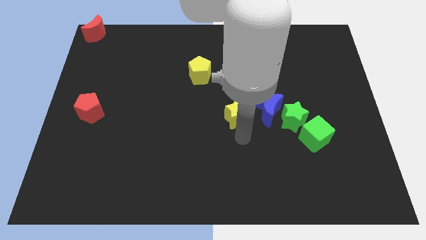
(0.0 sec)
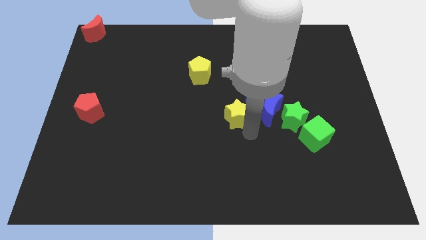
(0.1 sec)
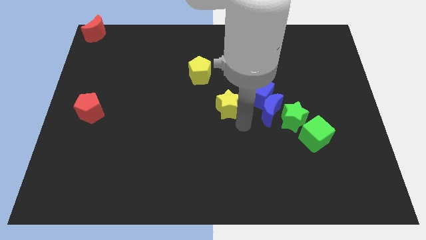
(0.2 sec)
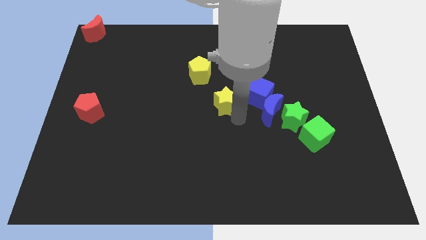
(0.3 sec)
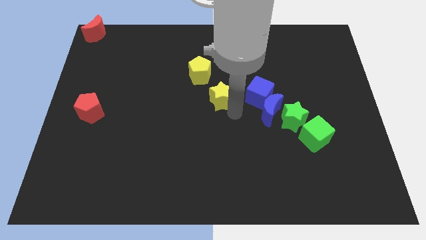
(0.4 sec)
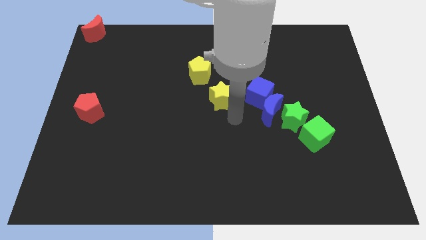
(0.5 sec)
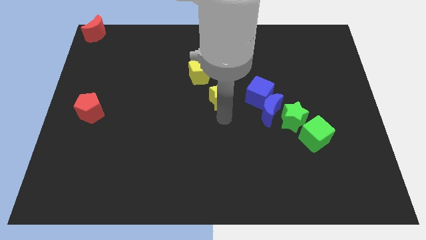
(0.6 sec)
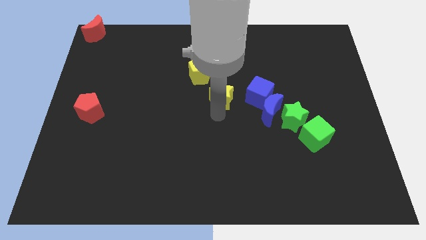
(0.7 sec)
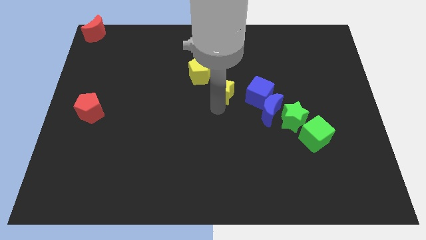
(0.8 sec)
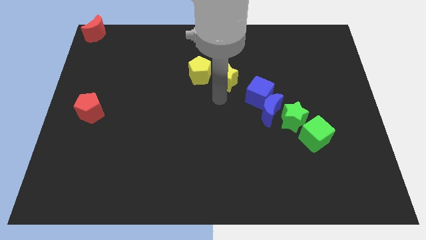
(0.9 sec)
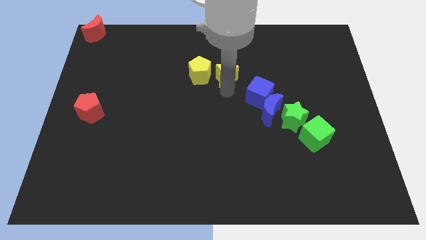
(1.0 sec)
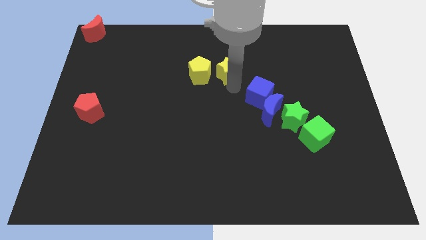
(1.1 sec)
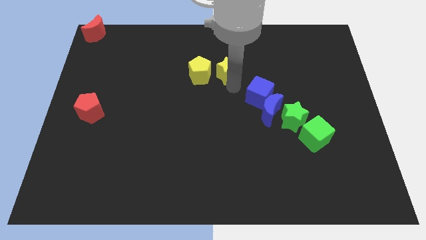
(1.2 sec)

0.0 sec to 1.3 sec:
place the yellow star to the right of the yellow pentagon

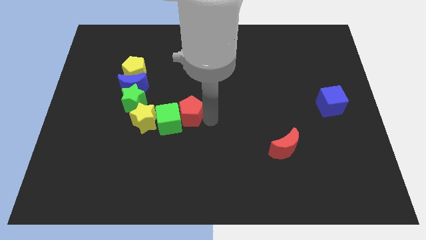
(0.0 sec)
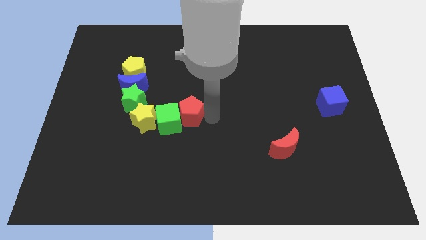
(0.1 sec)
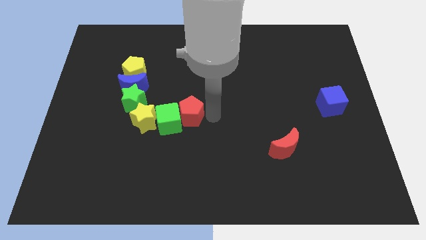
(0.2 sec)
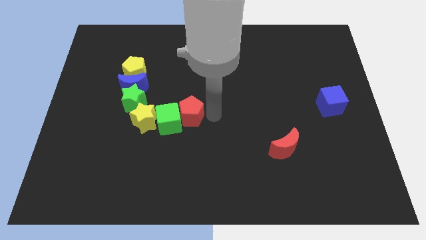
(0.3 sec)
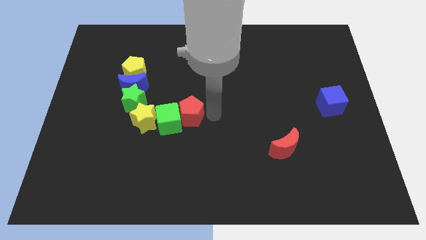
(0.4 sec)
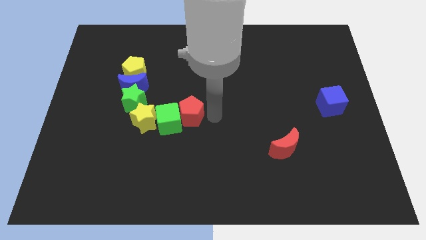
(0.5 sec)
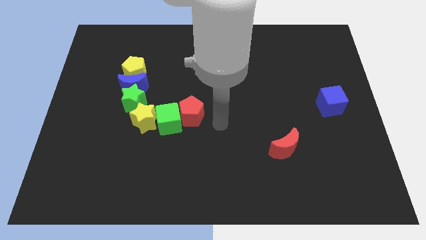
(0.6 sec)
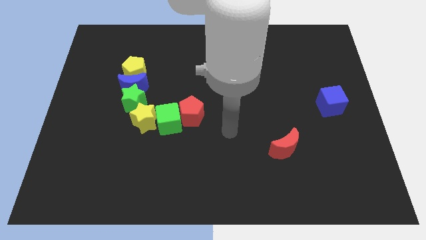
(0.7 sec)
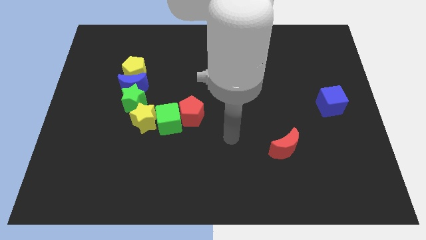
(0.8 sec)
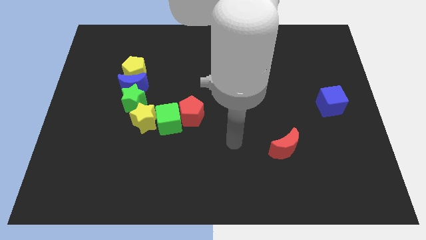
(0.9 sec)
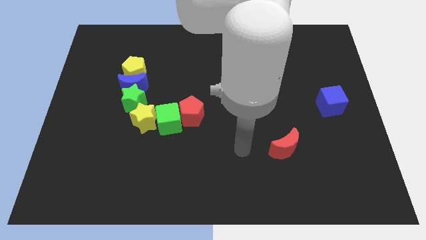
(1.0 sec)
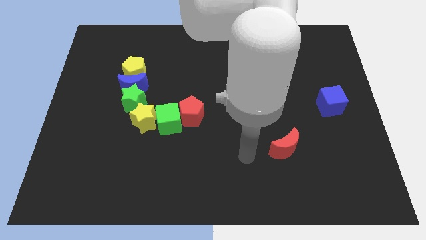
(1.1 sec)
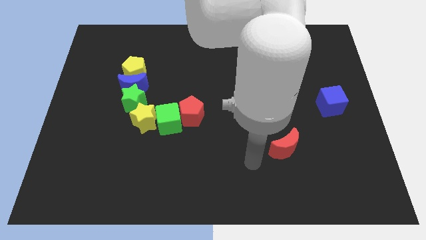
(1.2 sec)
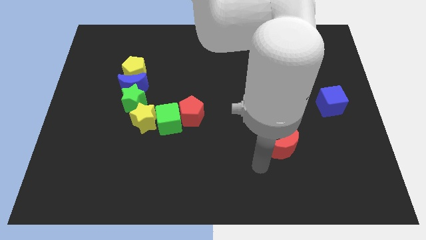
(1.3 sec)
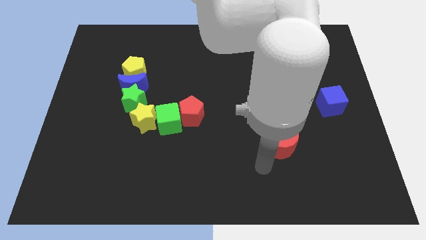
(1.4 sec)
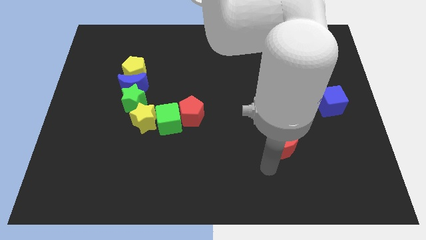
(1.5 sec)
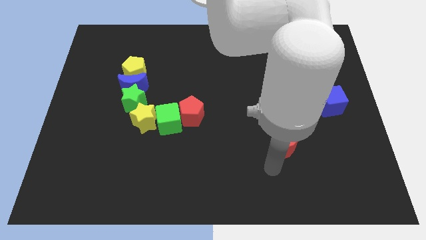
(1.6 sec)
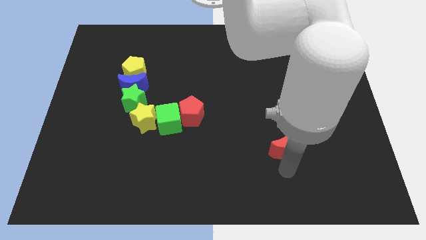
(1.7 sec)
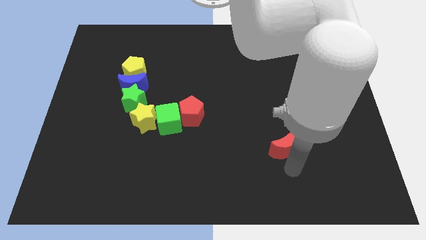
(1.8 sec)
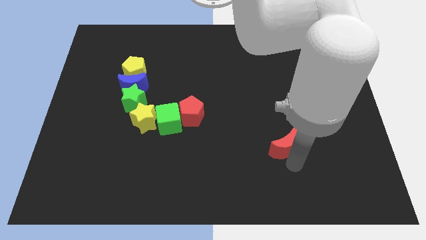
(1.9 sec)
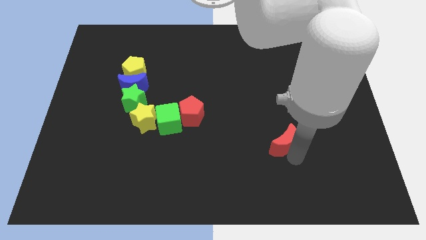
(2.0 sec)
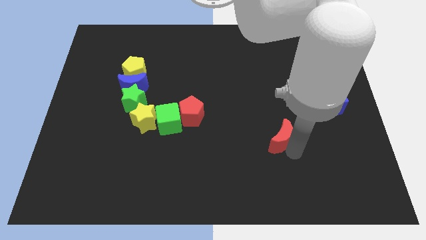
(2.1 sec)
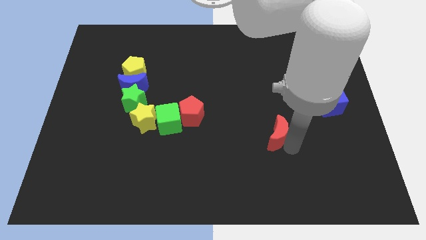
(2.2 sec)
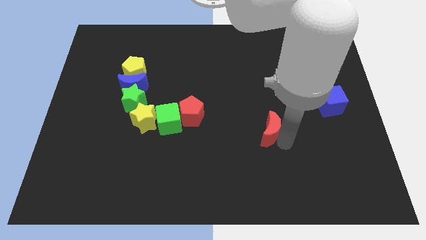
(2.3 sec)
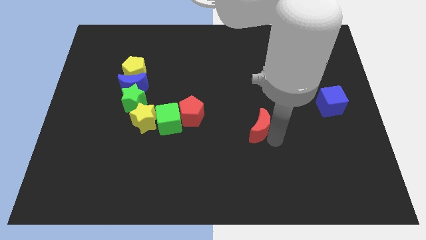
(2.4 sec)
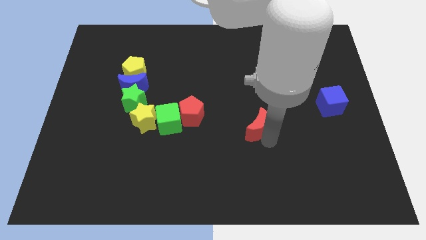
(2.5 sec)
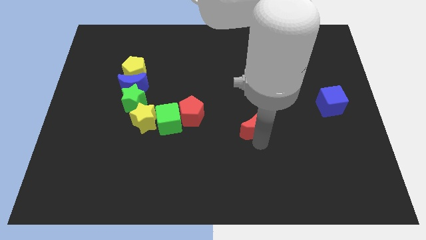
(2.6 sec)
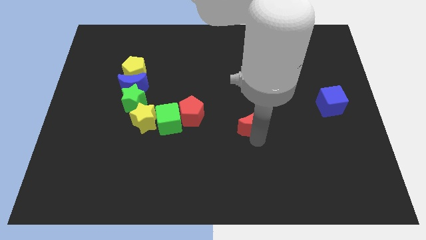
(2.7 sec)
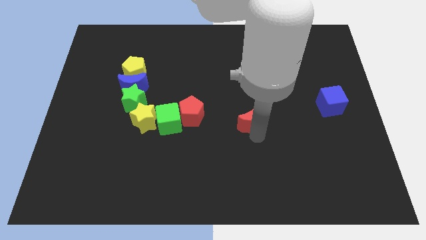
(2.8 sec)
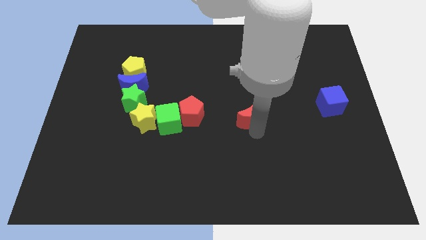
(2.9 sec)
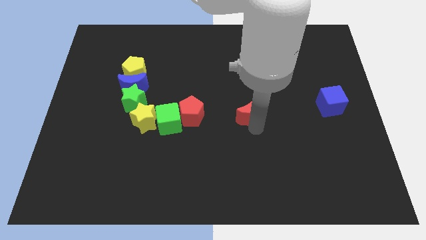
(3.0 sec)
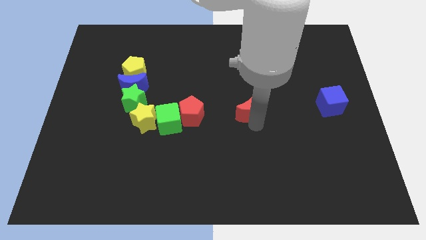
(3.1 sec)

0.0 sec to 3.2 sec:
move the red moon to the right of the red pentagon

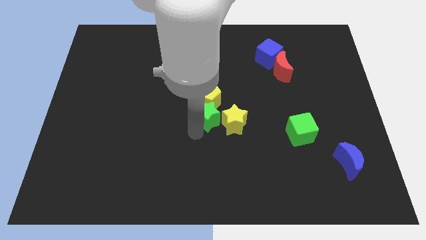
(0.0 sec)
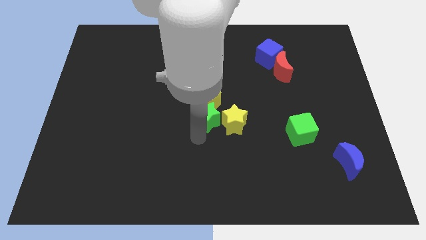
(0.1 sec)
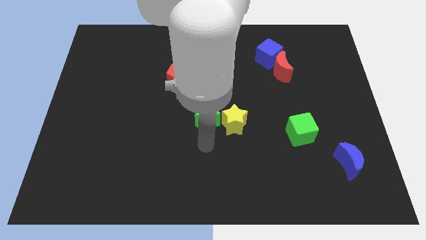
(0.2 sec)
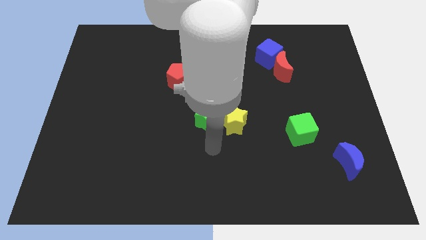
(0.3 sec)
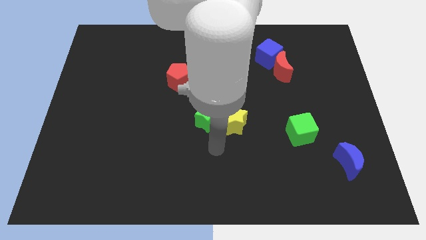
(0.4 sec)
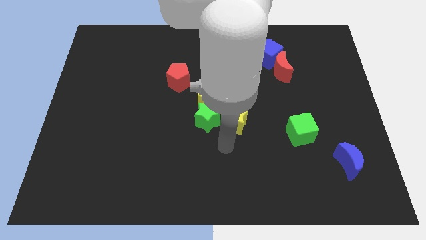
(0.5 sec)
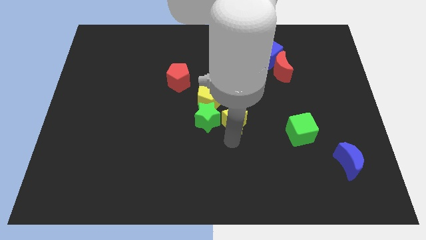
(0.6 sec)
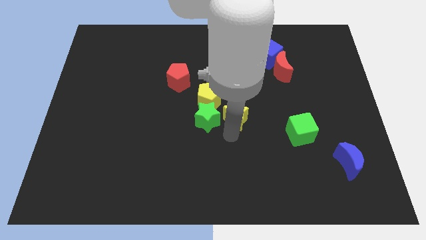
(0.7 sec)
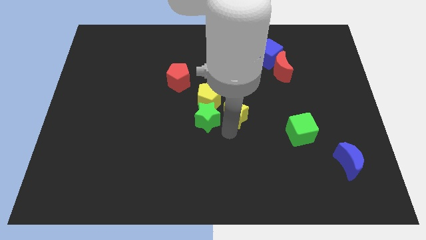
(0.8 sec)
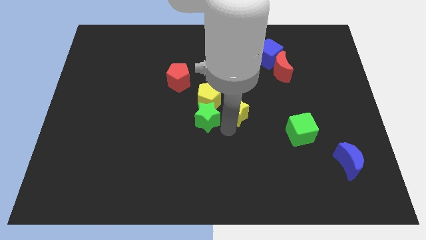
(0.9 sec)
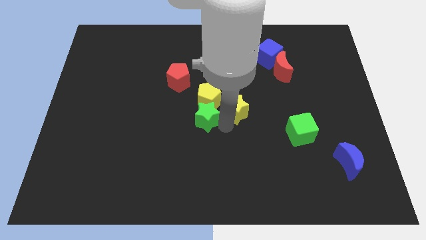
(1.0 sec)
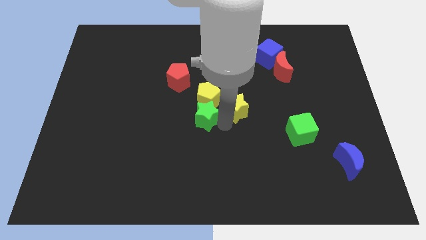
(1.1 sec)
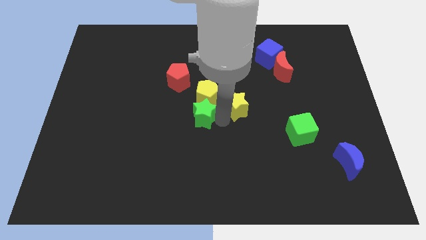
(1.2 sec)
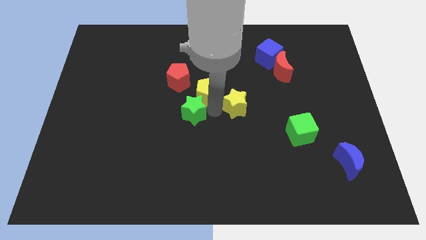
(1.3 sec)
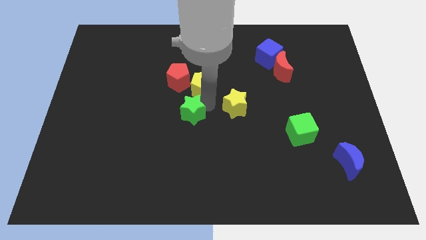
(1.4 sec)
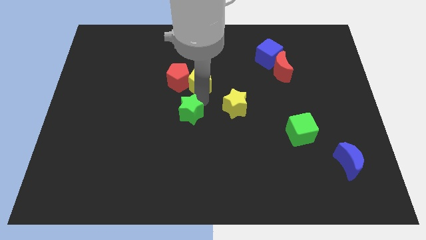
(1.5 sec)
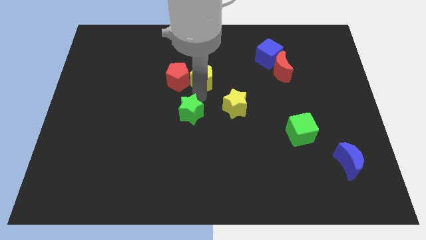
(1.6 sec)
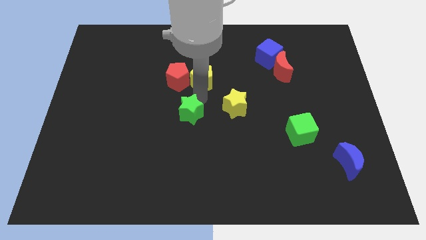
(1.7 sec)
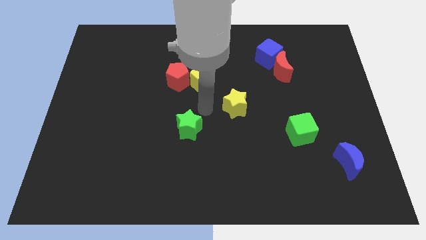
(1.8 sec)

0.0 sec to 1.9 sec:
slightly move the yellow pentagon to the red pentagon

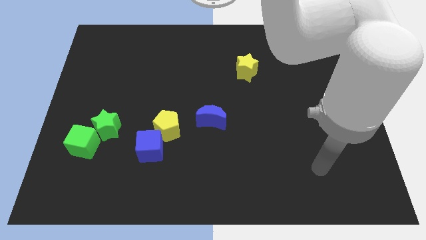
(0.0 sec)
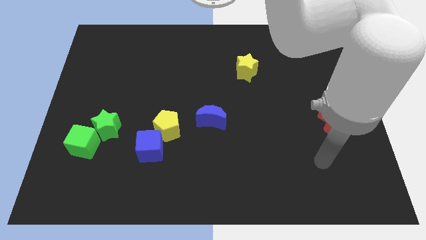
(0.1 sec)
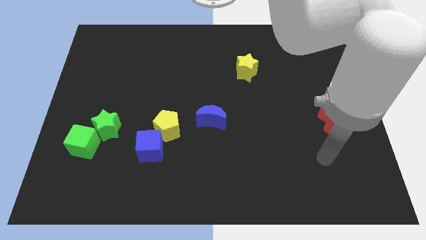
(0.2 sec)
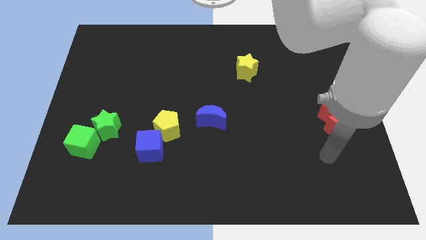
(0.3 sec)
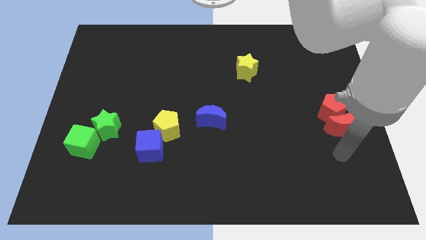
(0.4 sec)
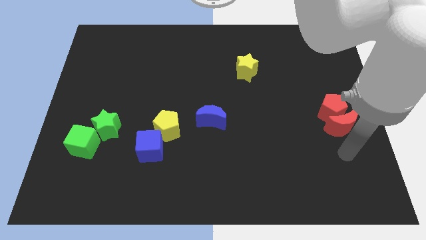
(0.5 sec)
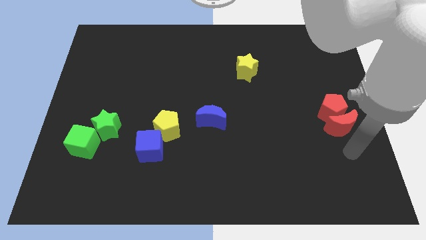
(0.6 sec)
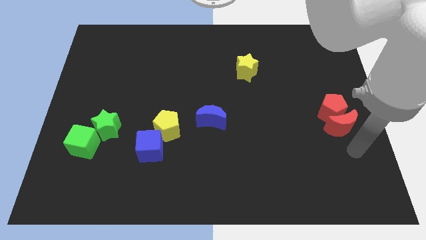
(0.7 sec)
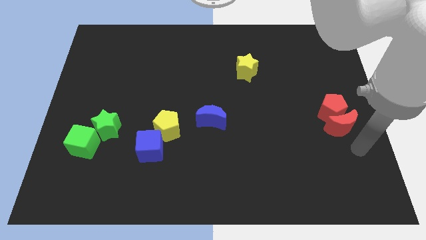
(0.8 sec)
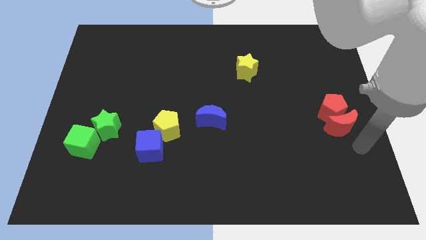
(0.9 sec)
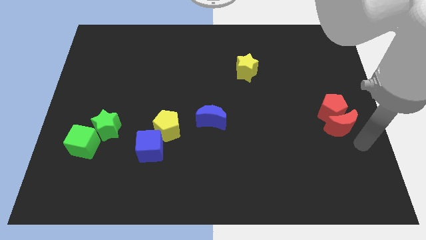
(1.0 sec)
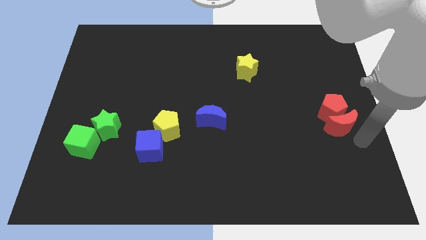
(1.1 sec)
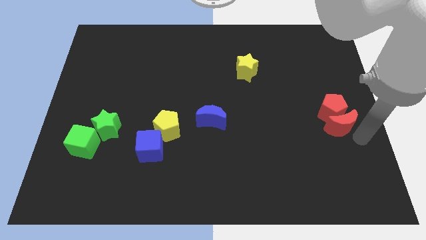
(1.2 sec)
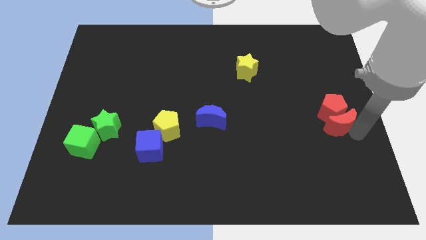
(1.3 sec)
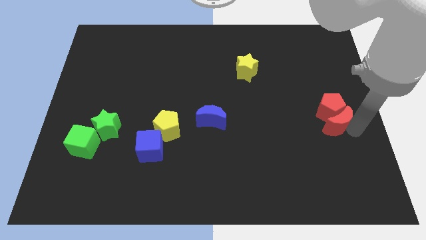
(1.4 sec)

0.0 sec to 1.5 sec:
move your arm bottom right of the red crescent

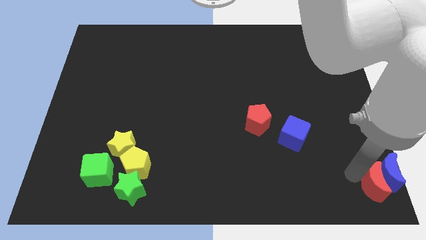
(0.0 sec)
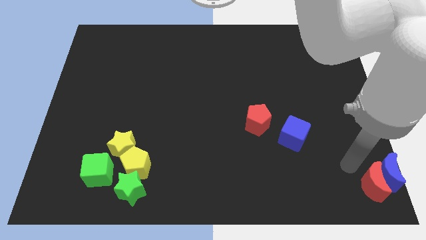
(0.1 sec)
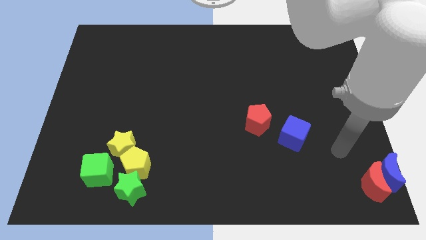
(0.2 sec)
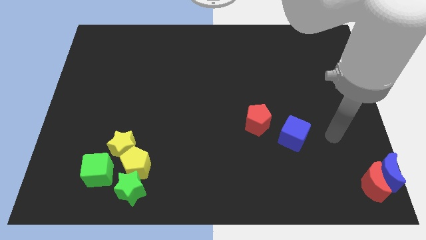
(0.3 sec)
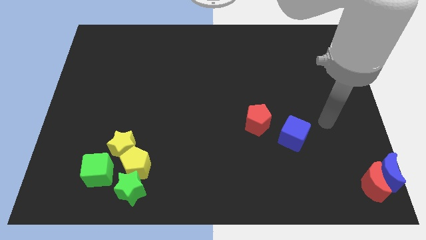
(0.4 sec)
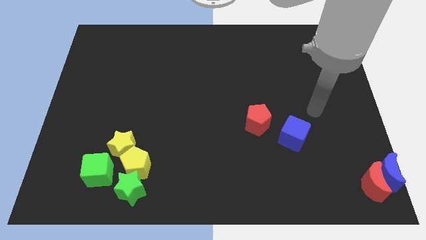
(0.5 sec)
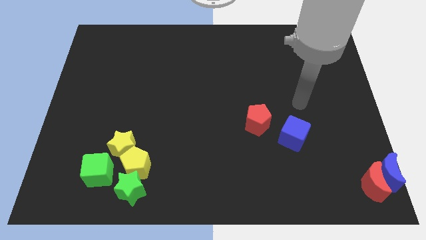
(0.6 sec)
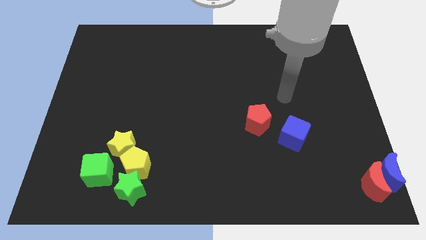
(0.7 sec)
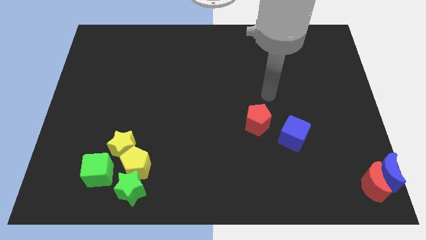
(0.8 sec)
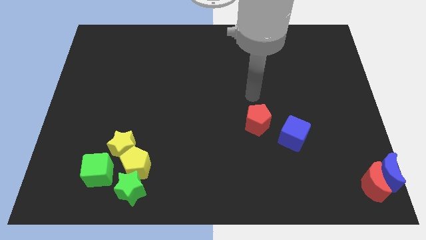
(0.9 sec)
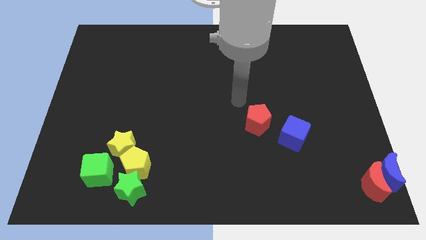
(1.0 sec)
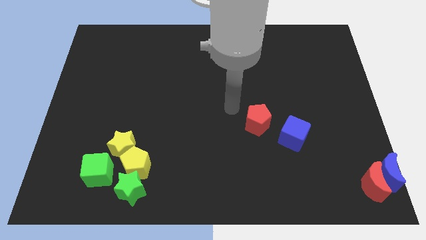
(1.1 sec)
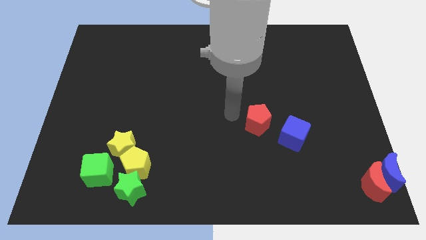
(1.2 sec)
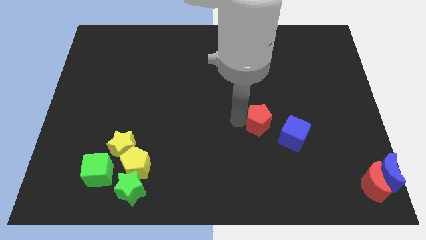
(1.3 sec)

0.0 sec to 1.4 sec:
go away from the red moon
